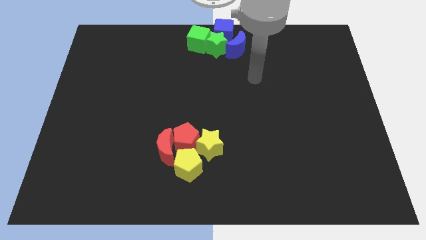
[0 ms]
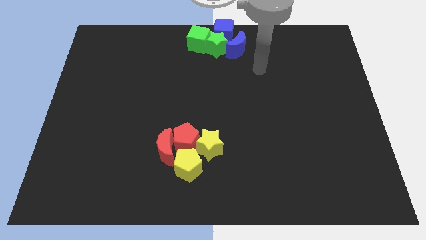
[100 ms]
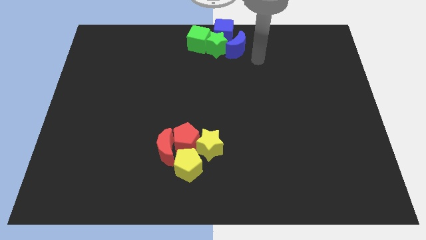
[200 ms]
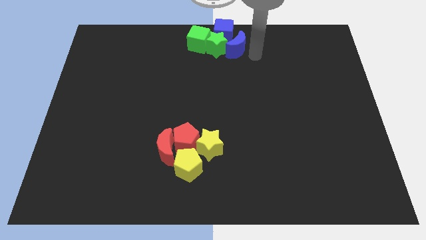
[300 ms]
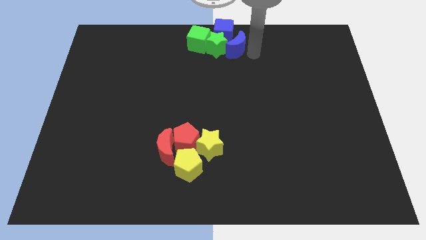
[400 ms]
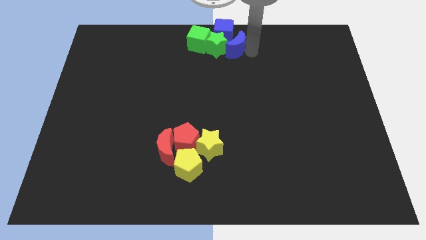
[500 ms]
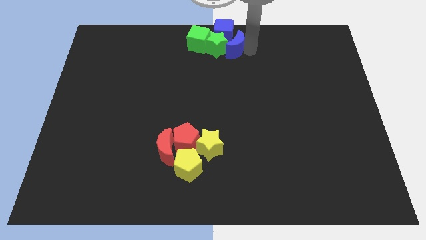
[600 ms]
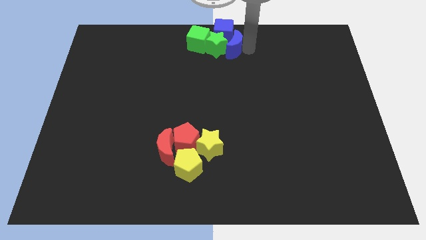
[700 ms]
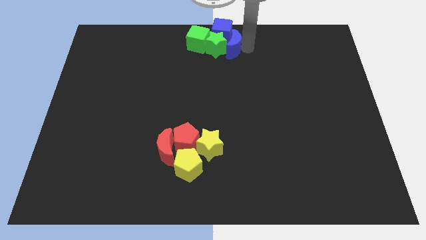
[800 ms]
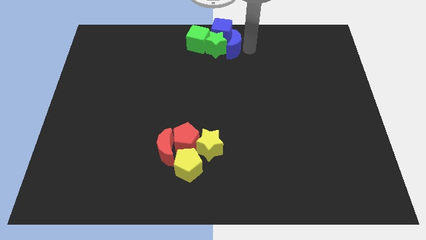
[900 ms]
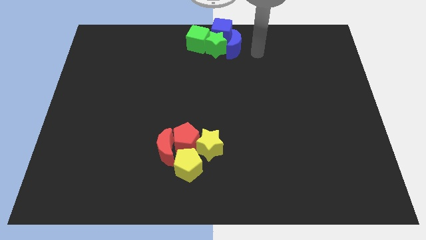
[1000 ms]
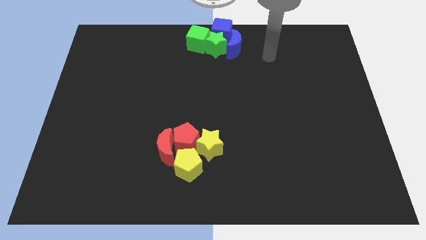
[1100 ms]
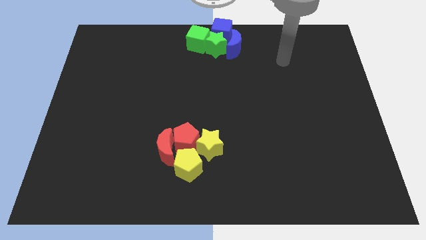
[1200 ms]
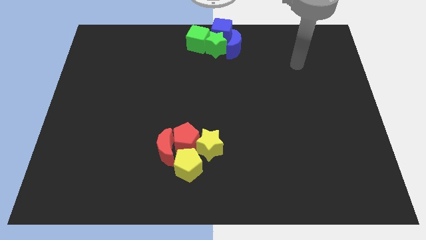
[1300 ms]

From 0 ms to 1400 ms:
move the blue crescent to the right of the green star

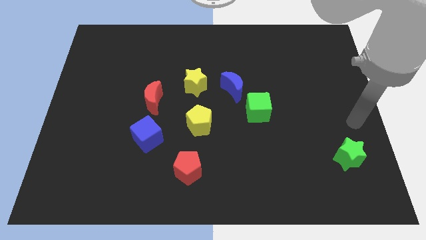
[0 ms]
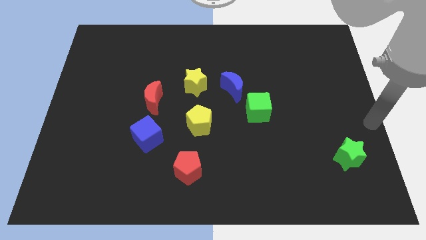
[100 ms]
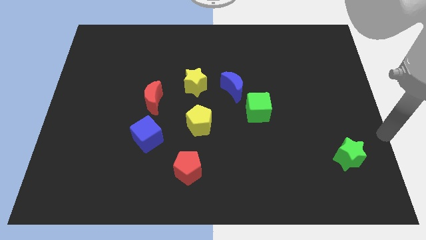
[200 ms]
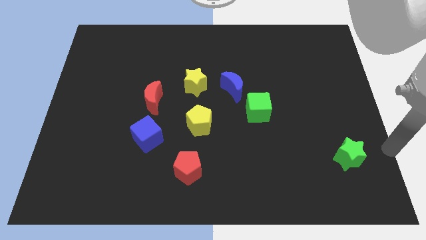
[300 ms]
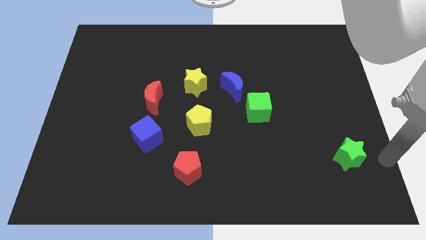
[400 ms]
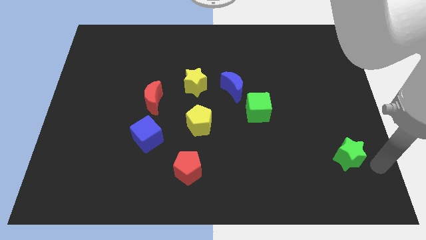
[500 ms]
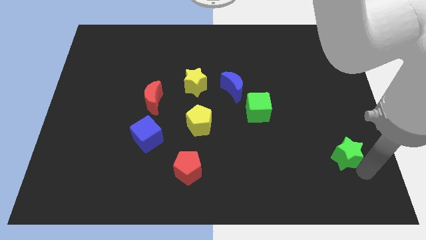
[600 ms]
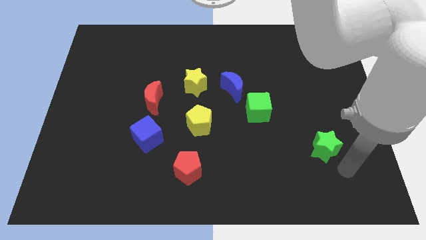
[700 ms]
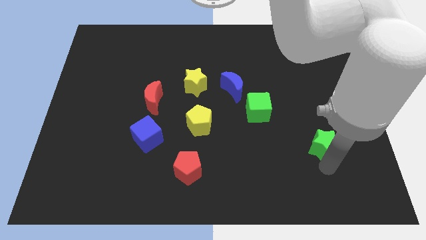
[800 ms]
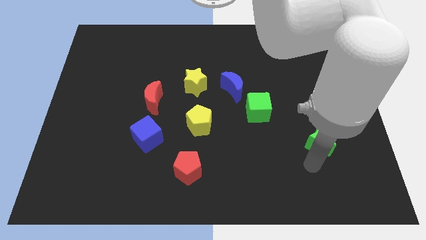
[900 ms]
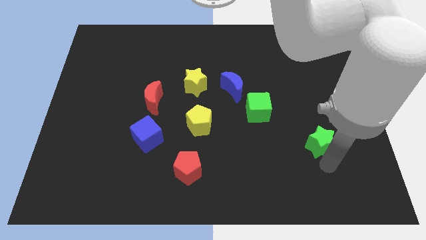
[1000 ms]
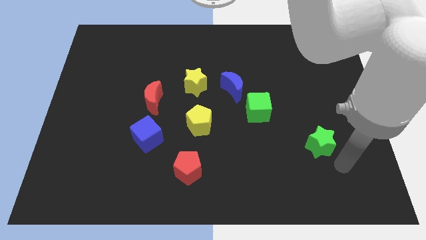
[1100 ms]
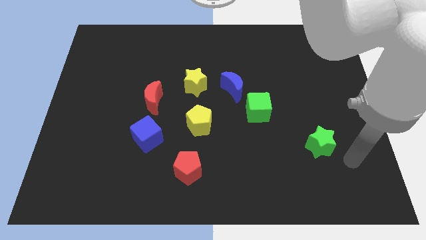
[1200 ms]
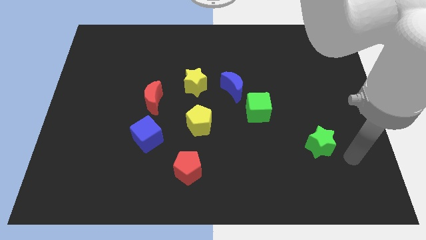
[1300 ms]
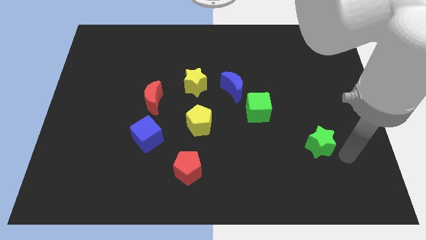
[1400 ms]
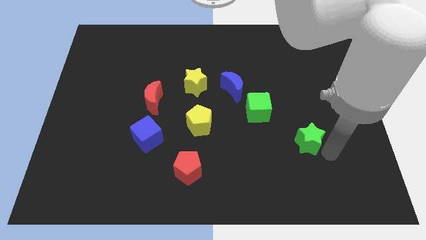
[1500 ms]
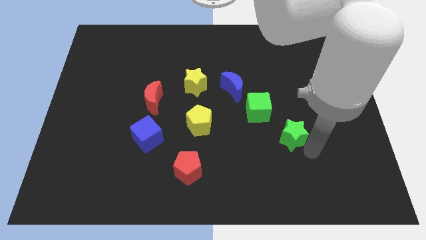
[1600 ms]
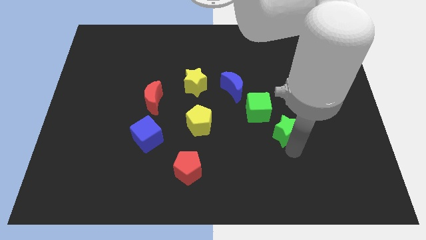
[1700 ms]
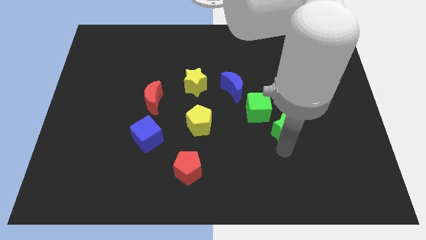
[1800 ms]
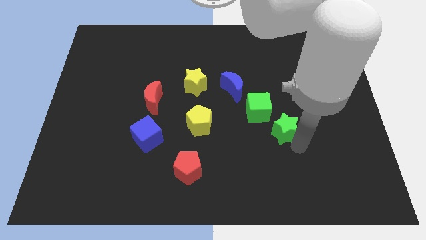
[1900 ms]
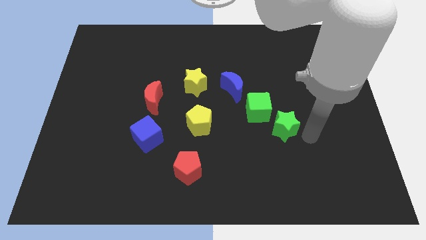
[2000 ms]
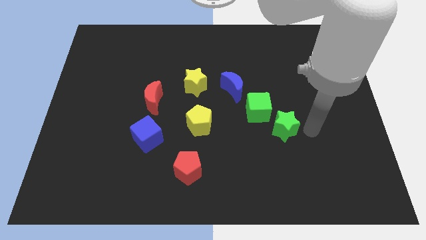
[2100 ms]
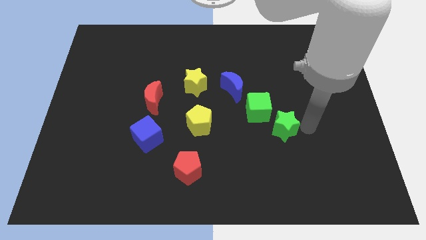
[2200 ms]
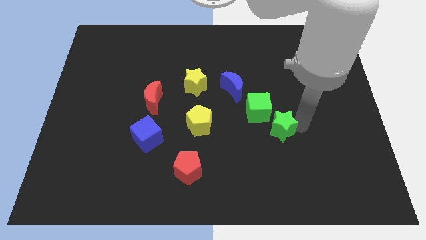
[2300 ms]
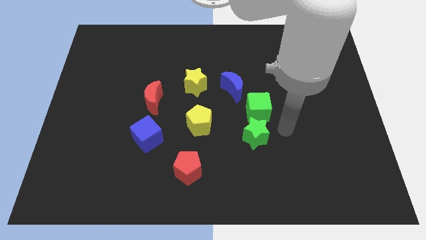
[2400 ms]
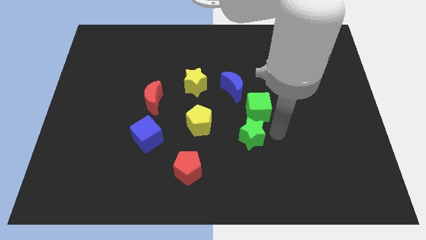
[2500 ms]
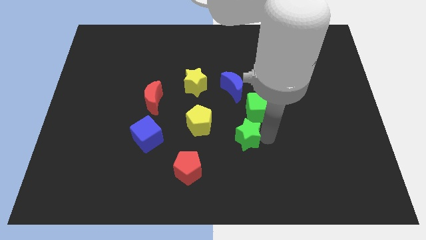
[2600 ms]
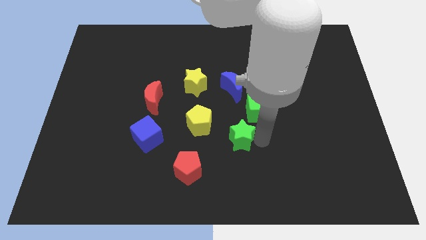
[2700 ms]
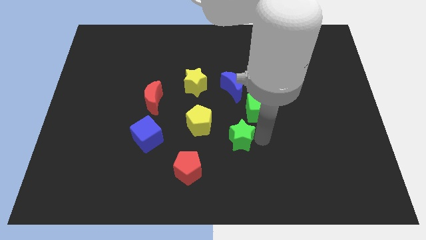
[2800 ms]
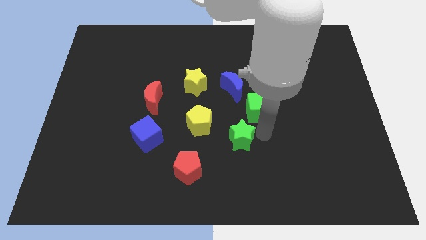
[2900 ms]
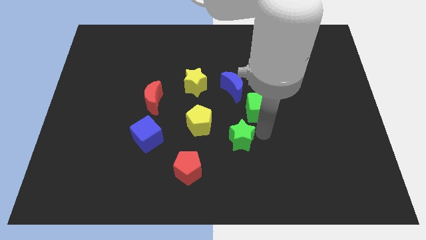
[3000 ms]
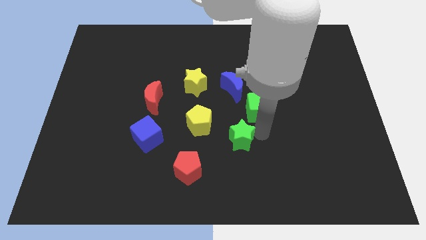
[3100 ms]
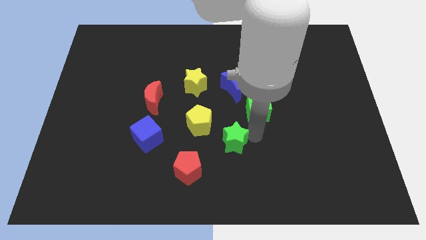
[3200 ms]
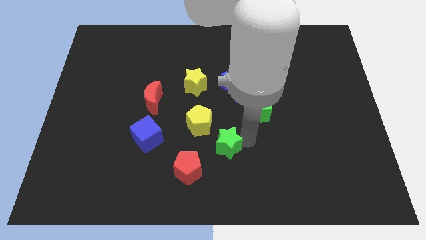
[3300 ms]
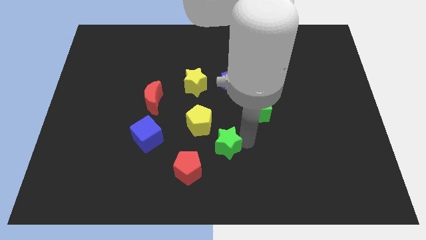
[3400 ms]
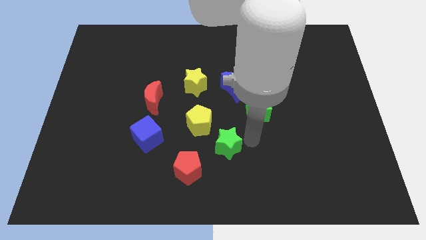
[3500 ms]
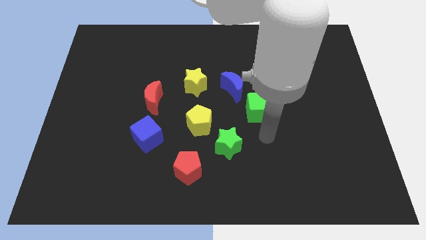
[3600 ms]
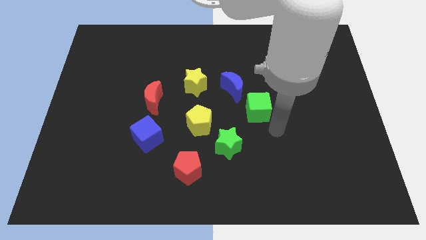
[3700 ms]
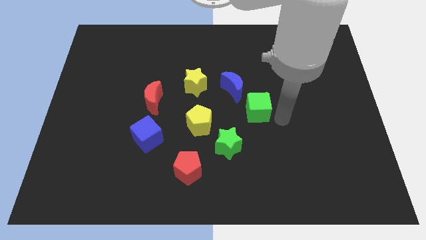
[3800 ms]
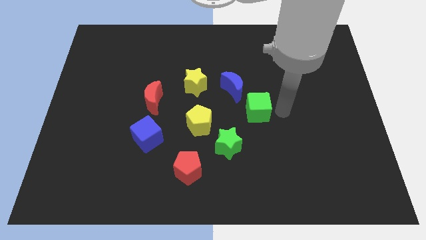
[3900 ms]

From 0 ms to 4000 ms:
push the green star towards the red pentagon

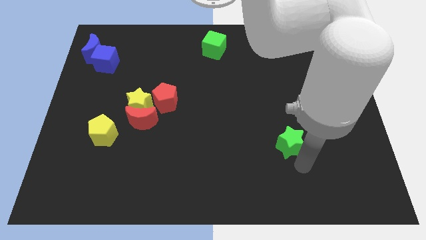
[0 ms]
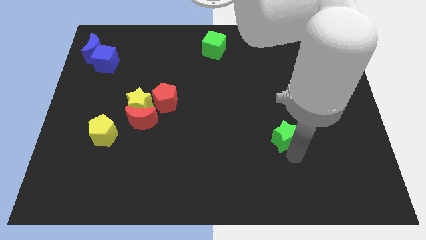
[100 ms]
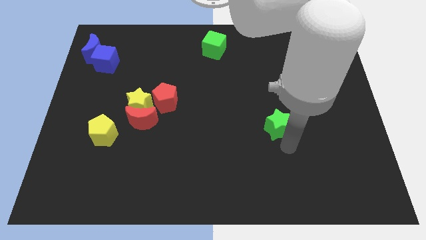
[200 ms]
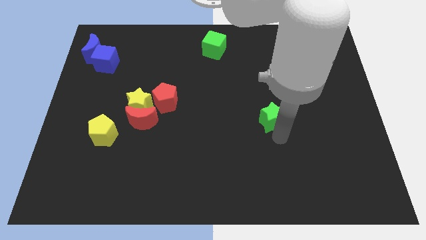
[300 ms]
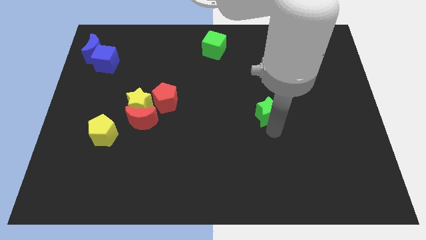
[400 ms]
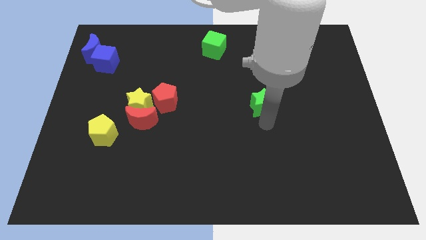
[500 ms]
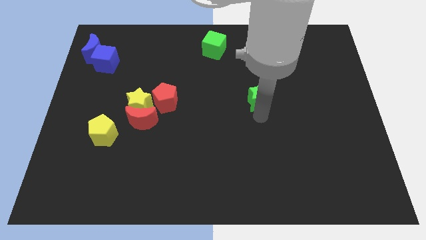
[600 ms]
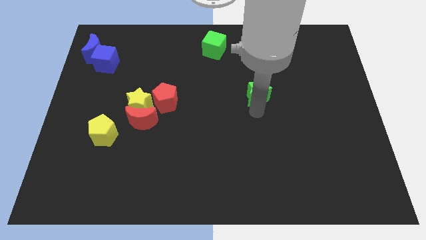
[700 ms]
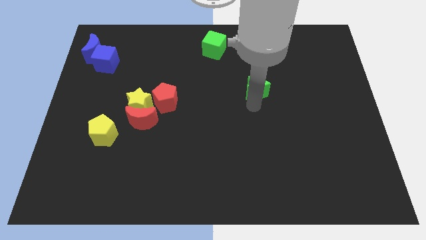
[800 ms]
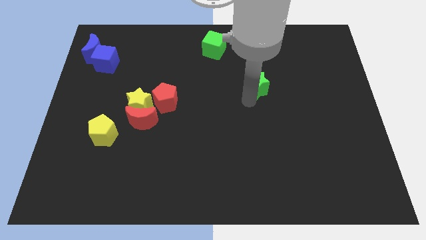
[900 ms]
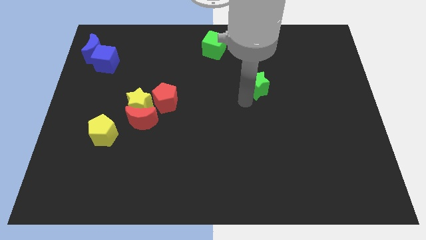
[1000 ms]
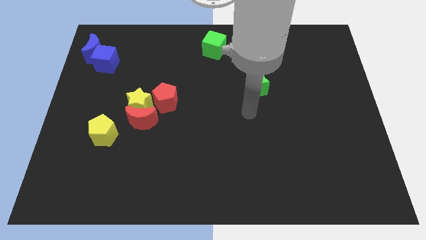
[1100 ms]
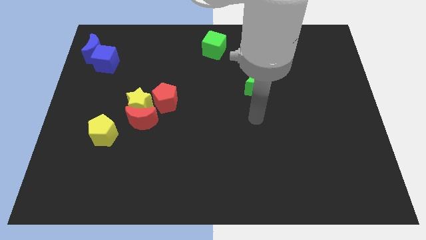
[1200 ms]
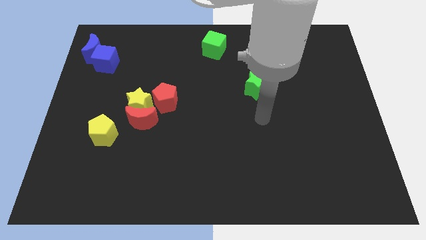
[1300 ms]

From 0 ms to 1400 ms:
push the green star diagonally to the right of the green cube

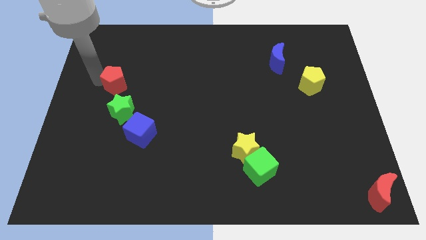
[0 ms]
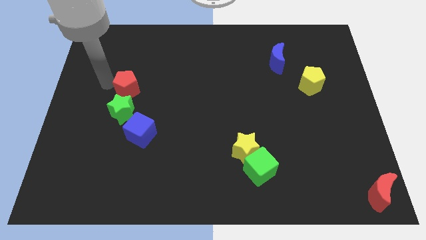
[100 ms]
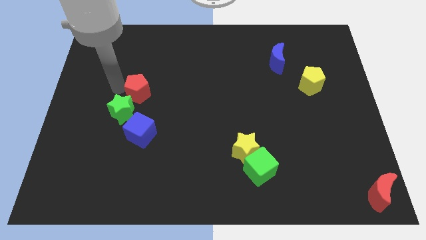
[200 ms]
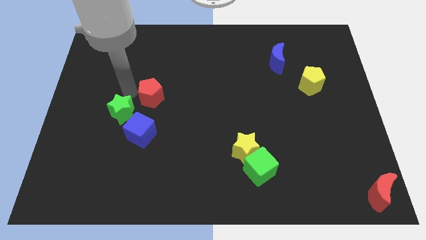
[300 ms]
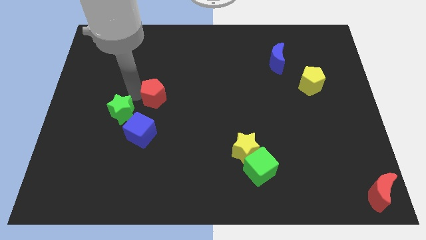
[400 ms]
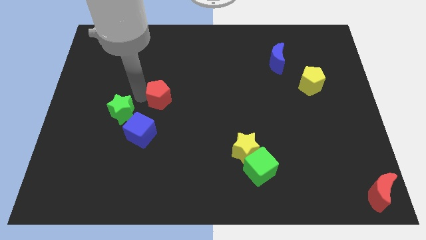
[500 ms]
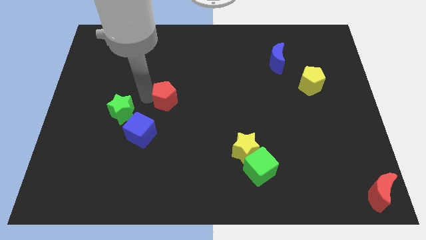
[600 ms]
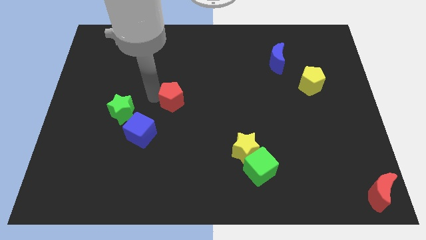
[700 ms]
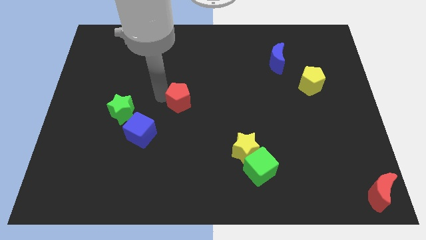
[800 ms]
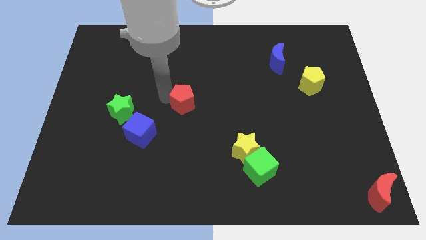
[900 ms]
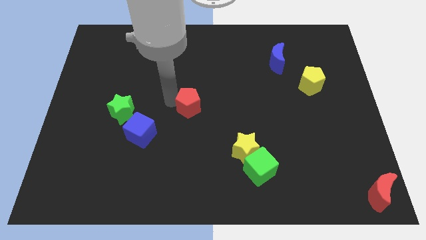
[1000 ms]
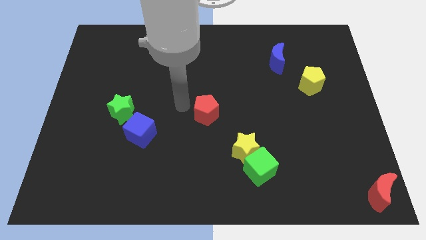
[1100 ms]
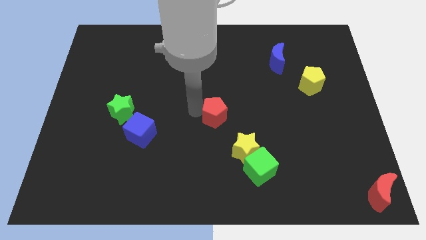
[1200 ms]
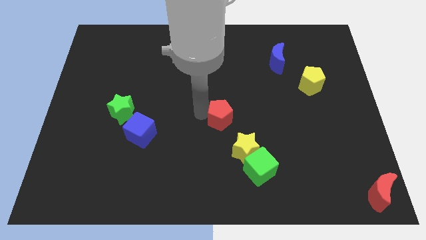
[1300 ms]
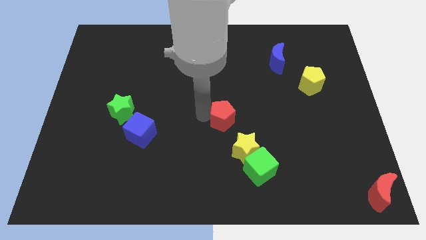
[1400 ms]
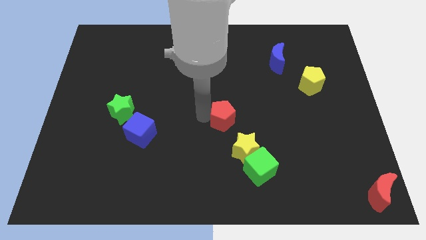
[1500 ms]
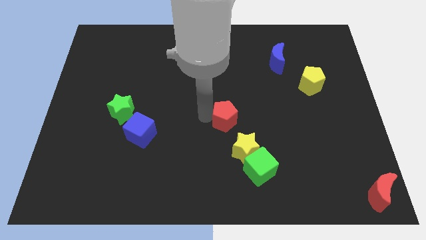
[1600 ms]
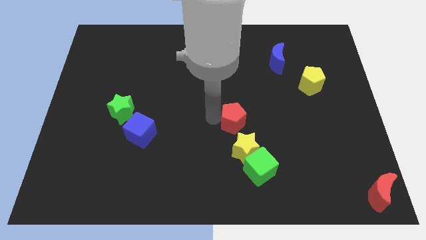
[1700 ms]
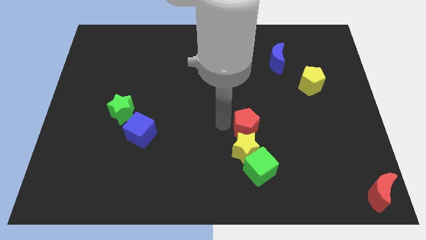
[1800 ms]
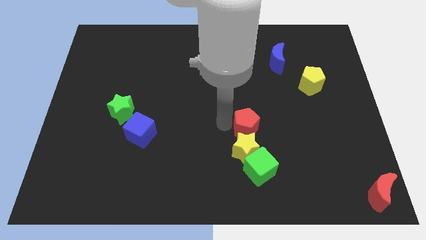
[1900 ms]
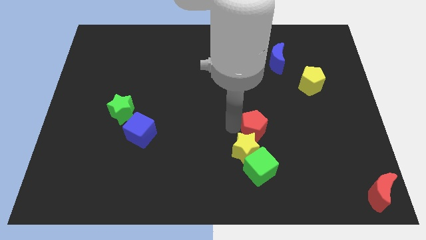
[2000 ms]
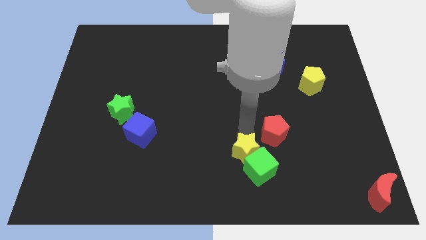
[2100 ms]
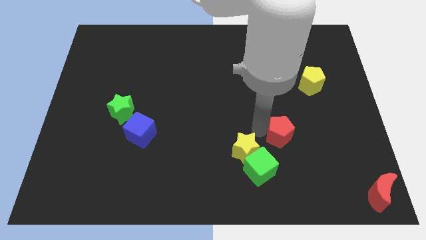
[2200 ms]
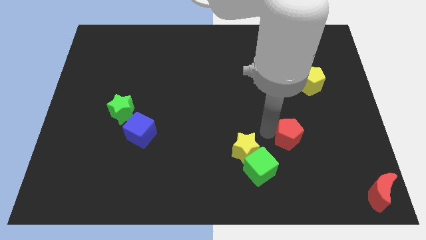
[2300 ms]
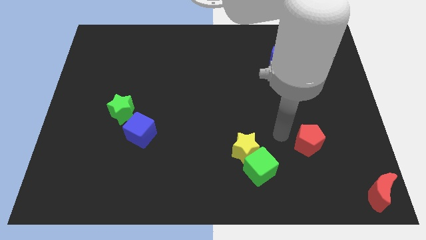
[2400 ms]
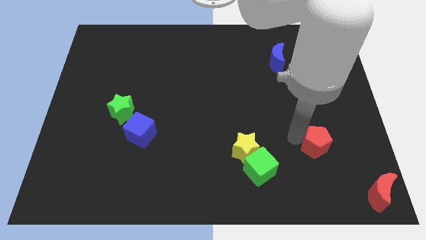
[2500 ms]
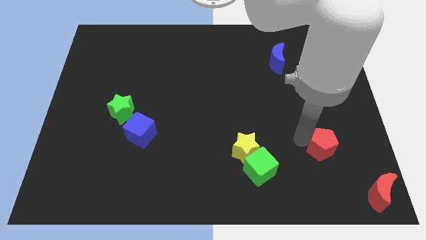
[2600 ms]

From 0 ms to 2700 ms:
push red pentagon above yellow pentagon
